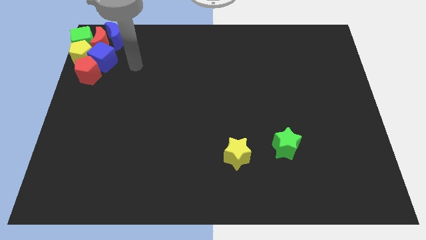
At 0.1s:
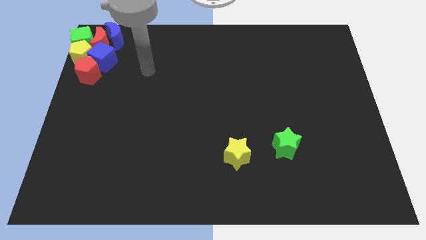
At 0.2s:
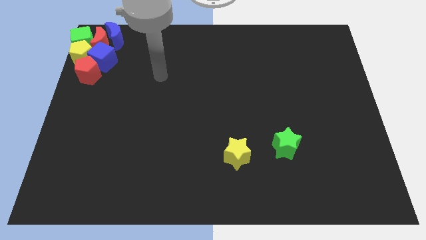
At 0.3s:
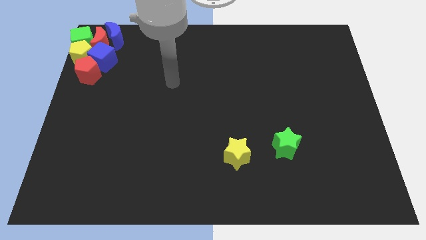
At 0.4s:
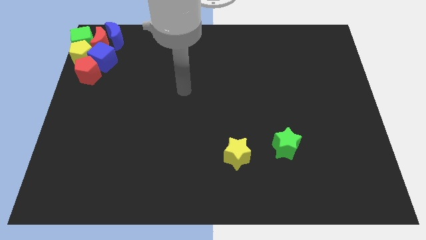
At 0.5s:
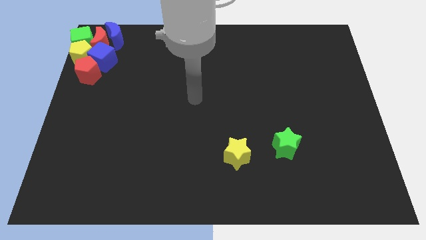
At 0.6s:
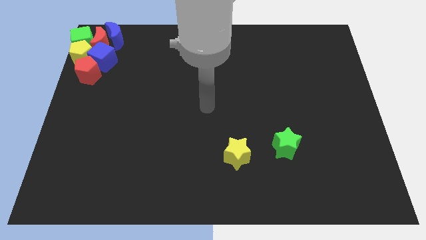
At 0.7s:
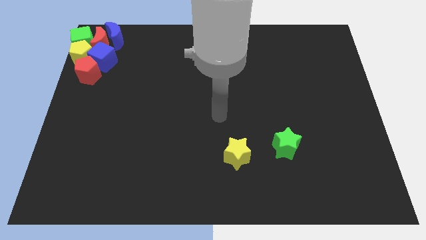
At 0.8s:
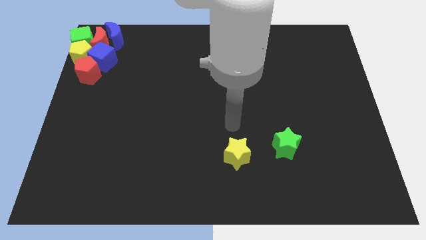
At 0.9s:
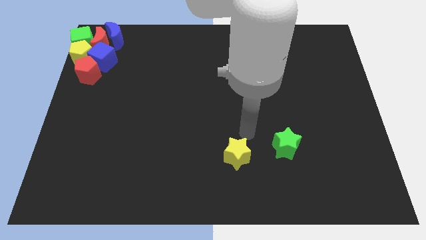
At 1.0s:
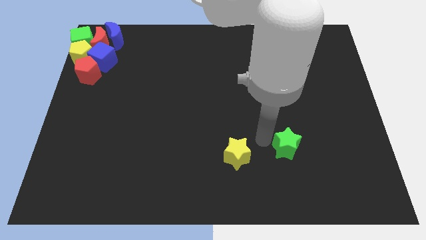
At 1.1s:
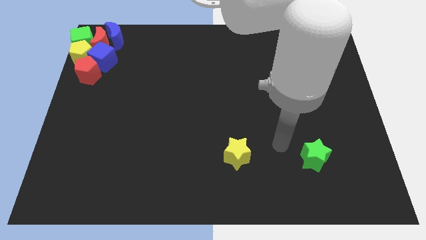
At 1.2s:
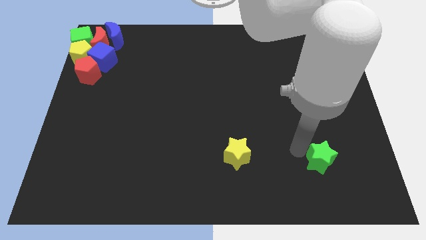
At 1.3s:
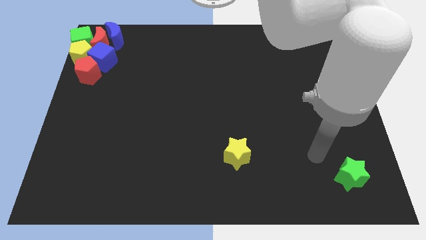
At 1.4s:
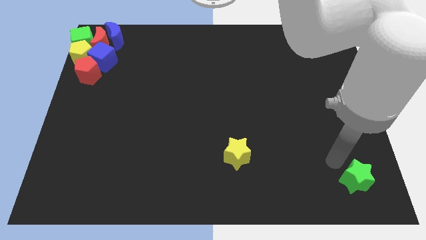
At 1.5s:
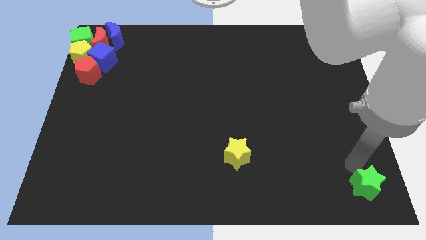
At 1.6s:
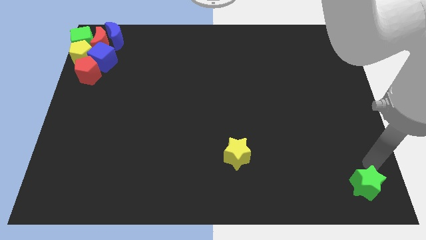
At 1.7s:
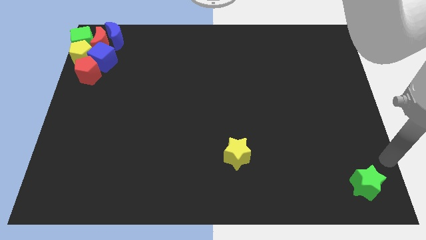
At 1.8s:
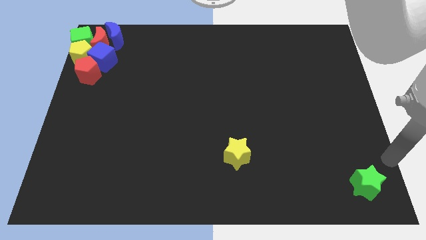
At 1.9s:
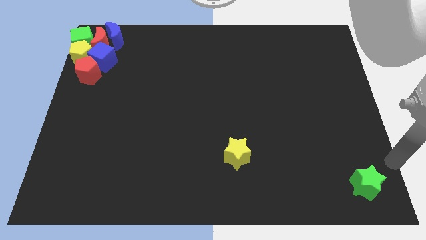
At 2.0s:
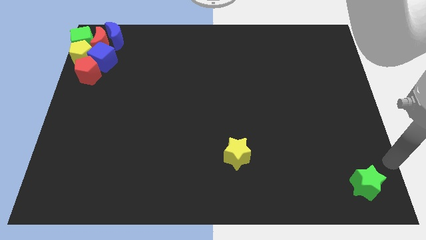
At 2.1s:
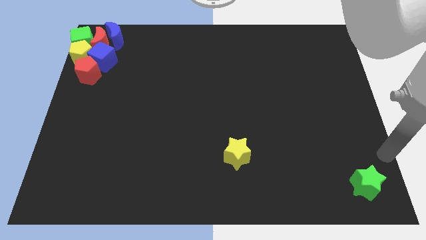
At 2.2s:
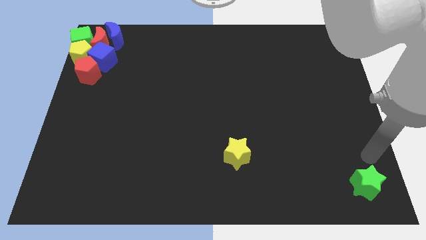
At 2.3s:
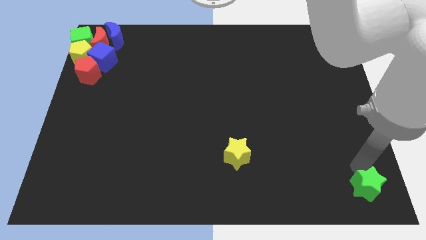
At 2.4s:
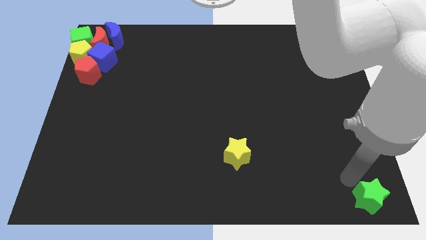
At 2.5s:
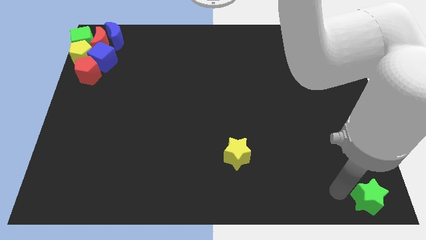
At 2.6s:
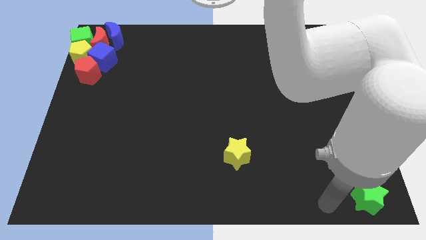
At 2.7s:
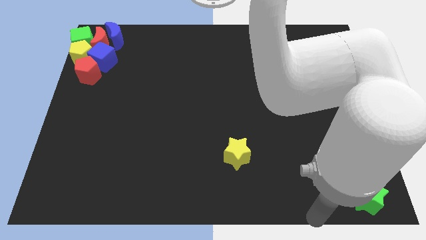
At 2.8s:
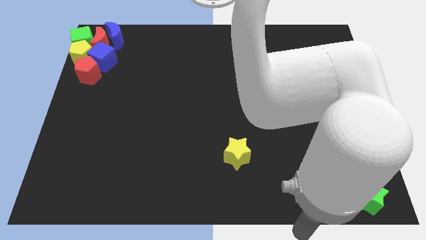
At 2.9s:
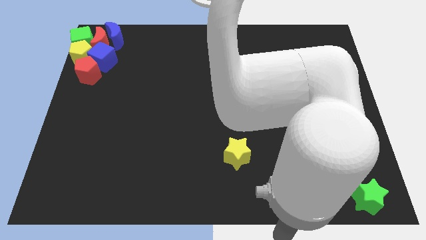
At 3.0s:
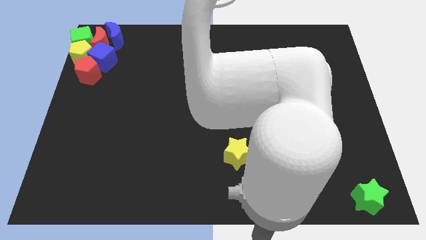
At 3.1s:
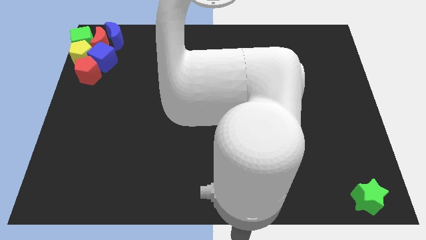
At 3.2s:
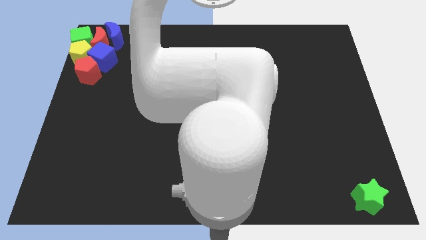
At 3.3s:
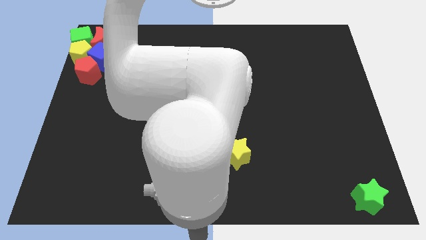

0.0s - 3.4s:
slide the green star to the bottom right corner of the board

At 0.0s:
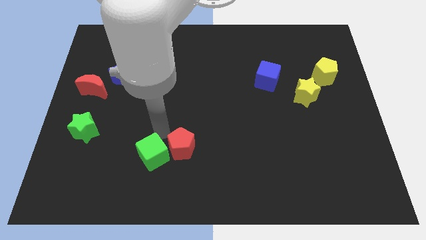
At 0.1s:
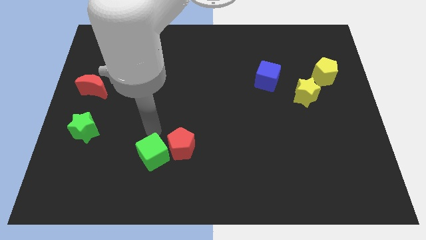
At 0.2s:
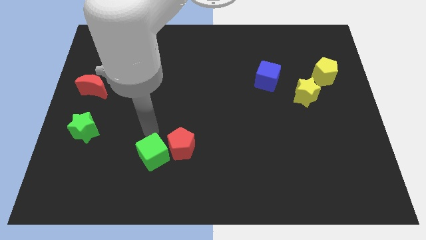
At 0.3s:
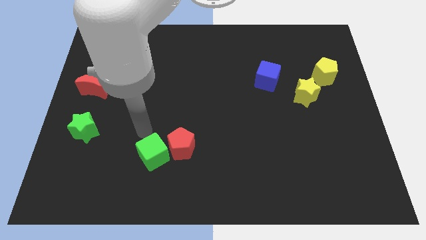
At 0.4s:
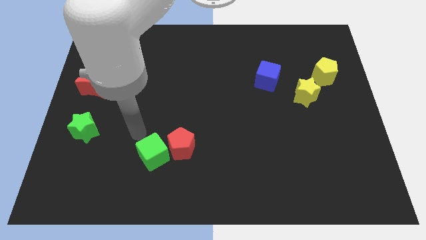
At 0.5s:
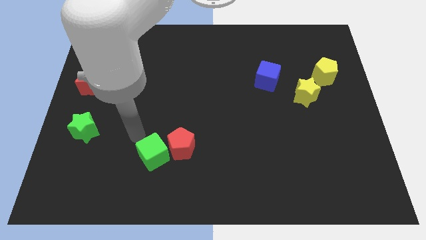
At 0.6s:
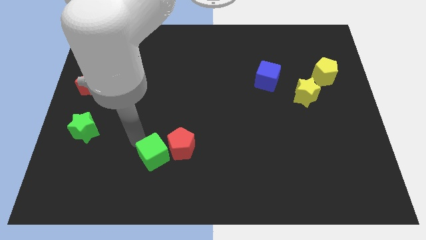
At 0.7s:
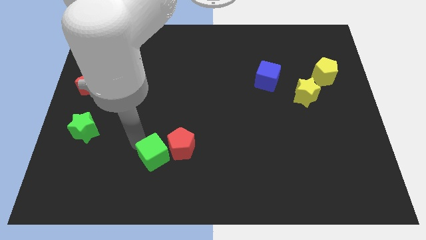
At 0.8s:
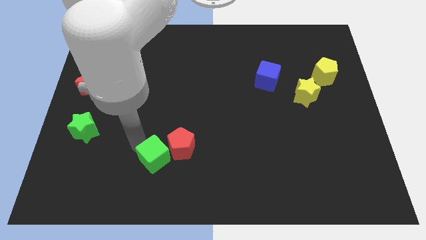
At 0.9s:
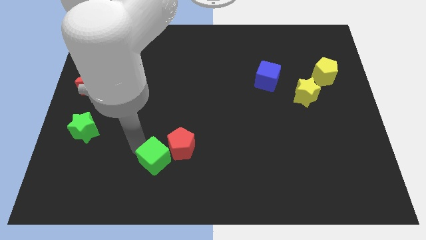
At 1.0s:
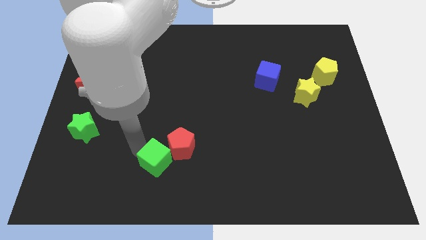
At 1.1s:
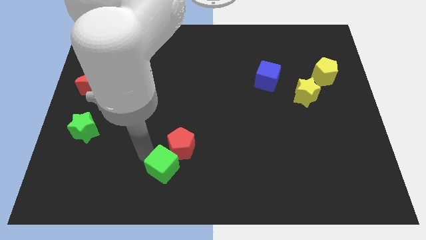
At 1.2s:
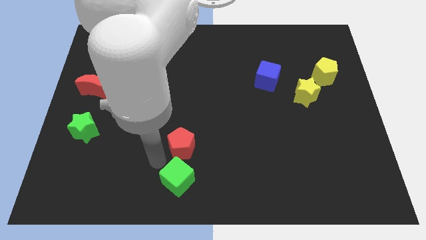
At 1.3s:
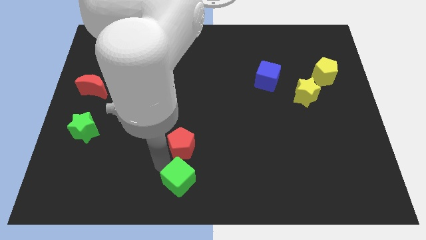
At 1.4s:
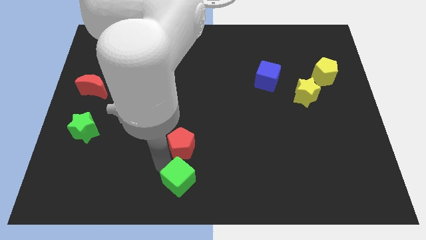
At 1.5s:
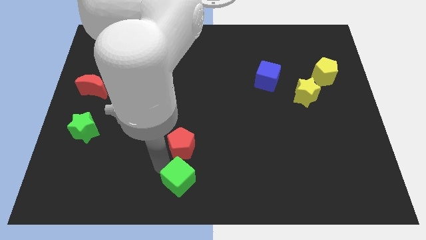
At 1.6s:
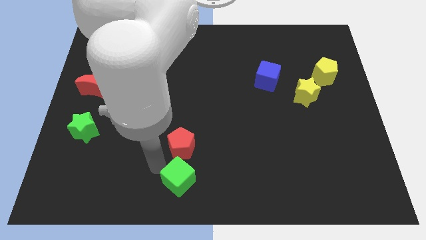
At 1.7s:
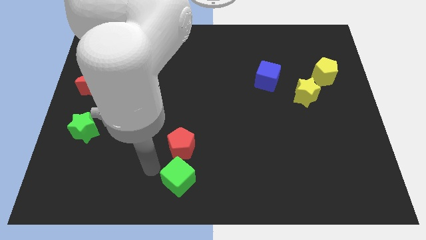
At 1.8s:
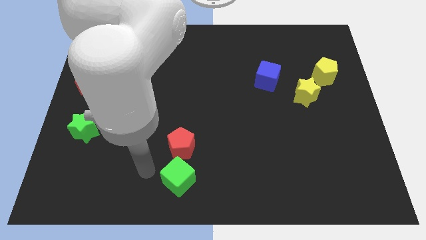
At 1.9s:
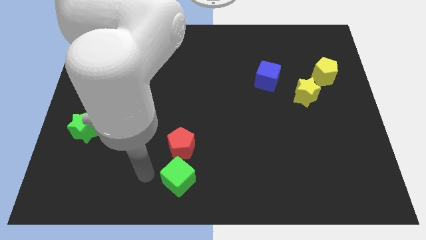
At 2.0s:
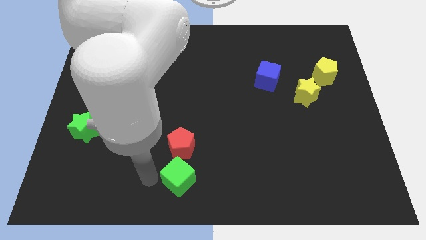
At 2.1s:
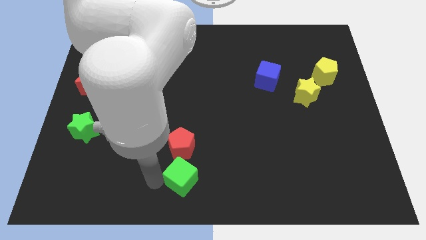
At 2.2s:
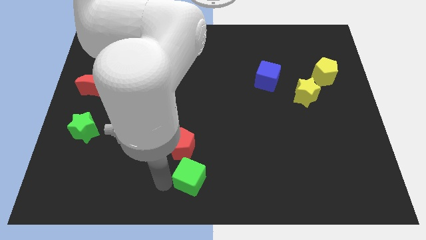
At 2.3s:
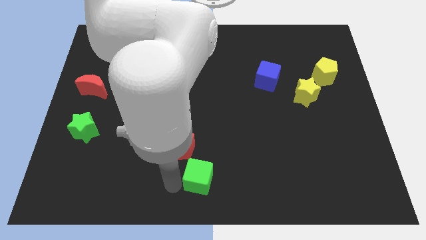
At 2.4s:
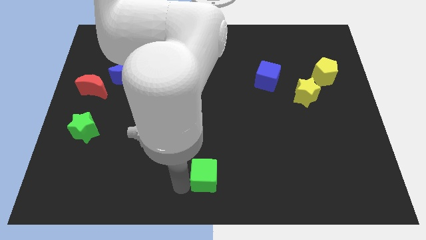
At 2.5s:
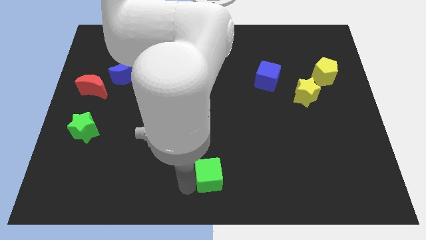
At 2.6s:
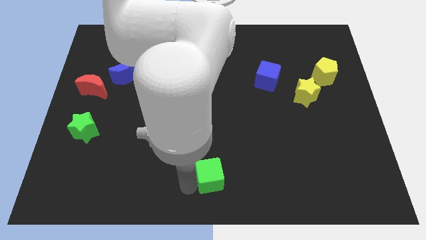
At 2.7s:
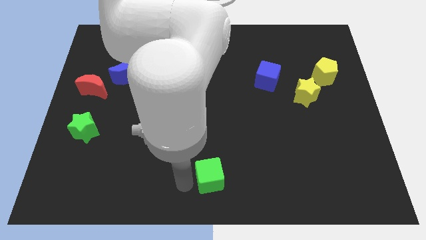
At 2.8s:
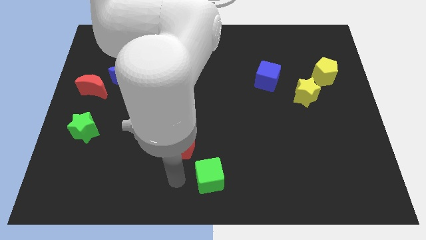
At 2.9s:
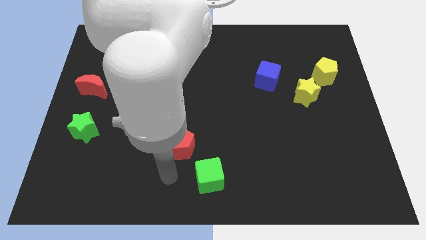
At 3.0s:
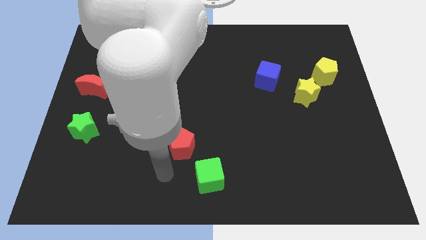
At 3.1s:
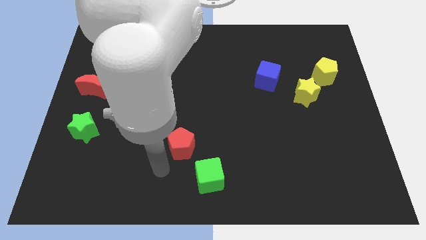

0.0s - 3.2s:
push the green cube to the bottom center of the board

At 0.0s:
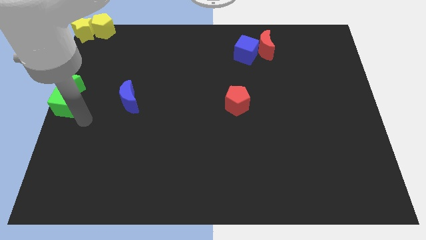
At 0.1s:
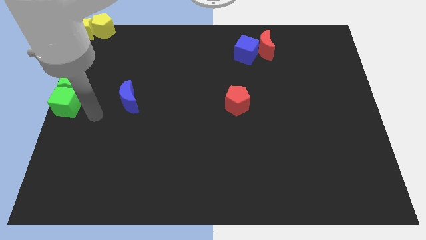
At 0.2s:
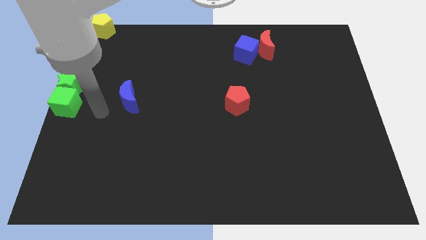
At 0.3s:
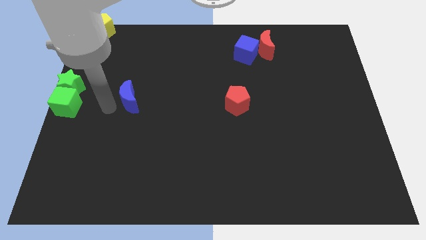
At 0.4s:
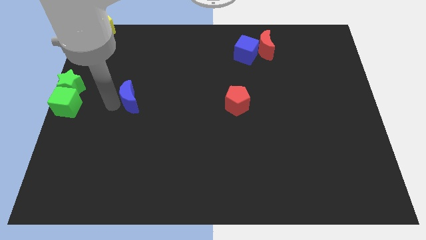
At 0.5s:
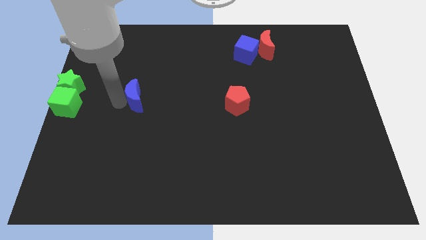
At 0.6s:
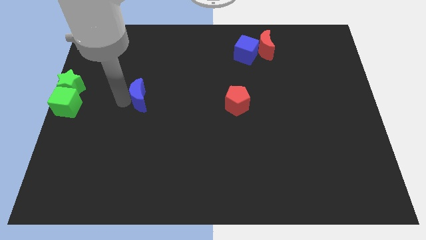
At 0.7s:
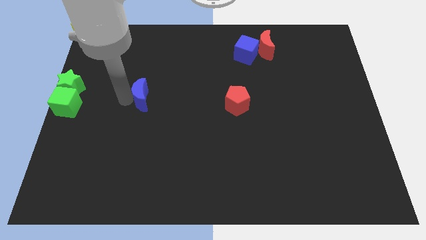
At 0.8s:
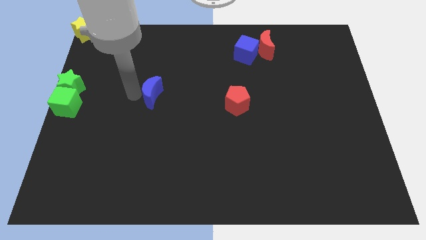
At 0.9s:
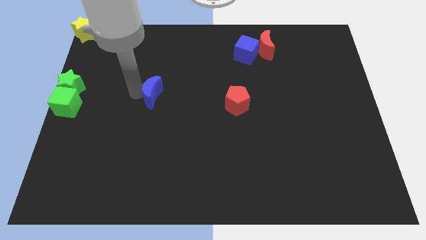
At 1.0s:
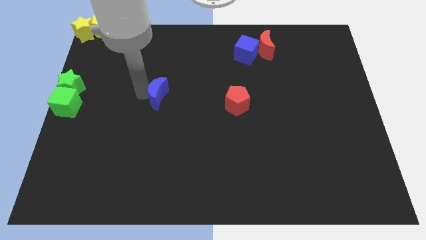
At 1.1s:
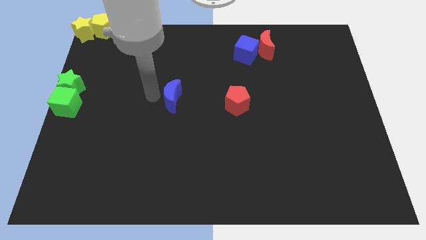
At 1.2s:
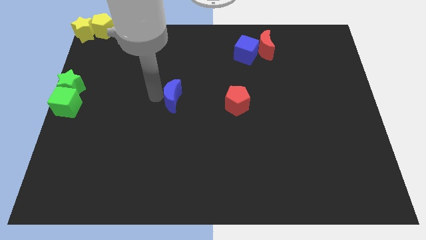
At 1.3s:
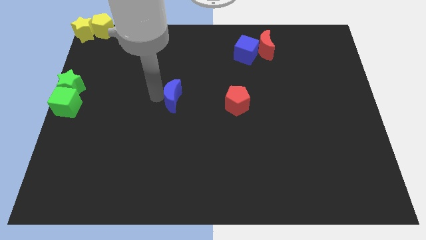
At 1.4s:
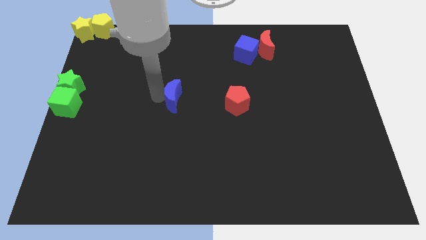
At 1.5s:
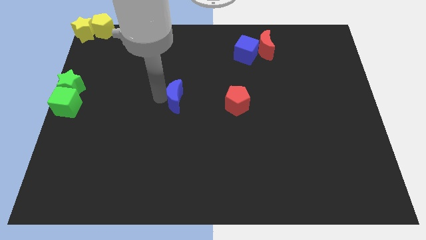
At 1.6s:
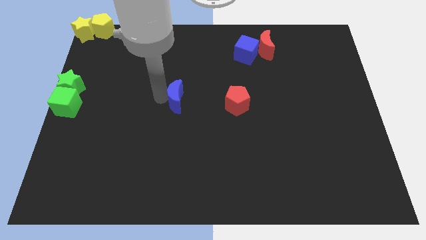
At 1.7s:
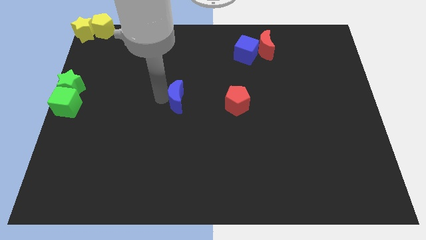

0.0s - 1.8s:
push the blue moon towards the center of the board

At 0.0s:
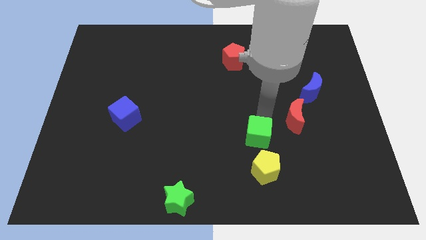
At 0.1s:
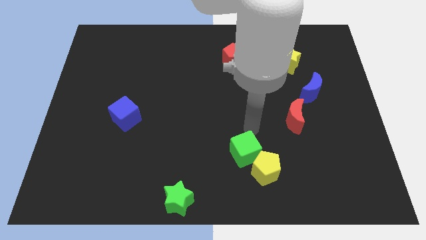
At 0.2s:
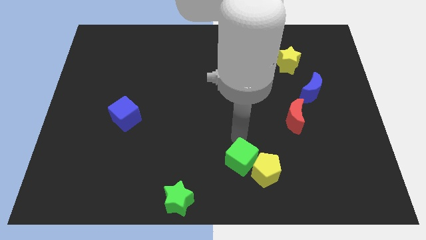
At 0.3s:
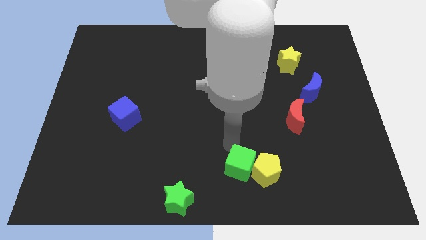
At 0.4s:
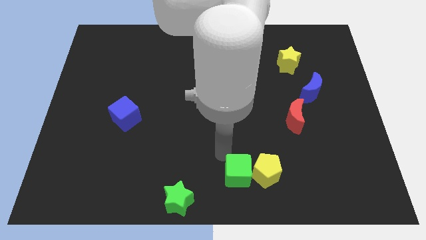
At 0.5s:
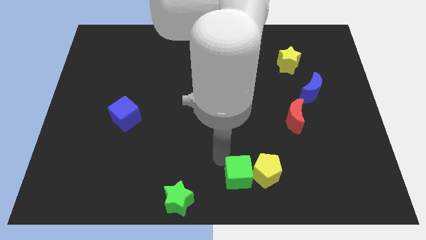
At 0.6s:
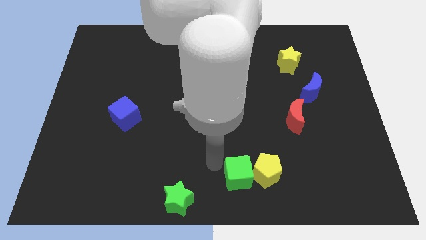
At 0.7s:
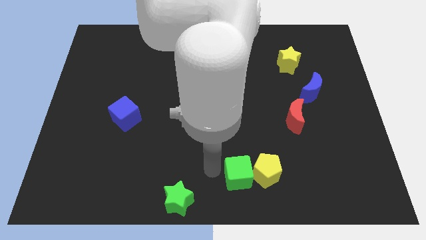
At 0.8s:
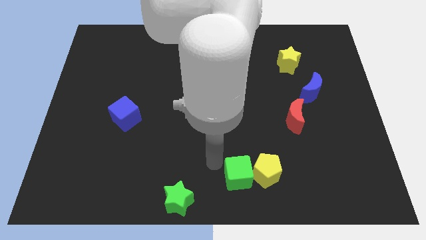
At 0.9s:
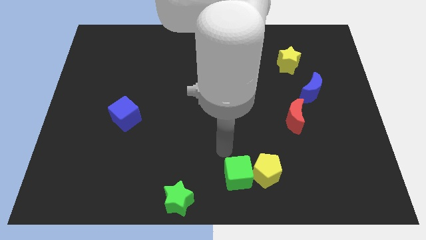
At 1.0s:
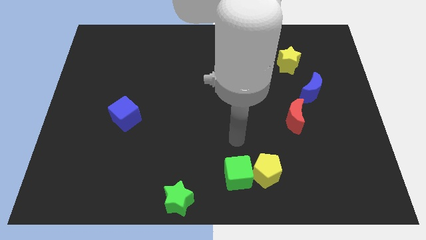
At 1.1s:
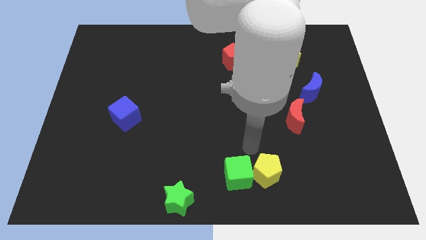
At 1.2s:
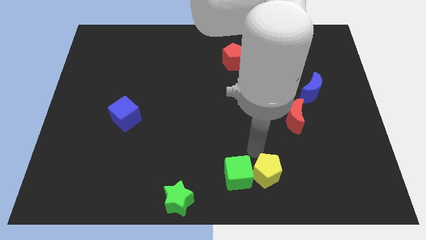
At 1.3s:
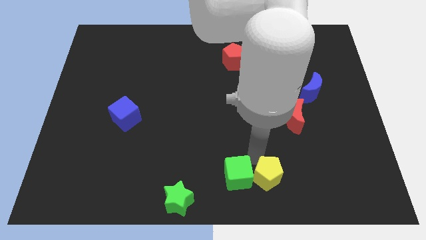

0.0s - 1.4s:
move the green cube to the left of the yellow pentagon
